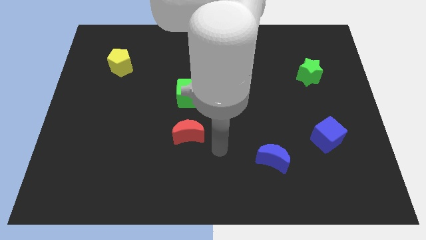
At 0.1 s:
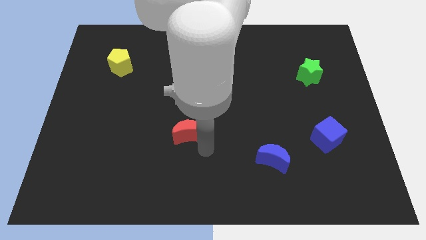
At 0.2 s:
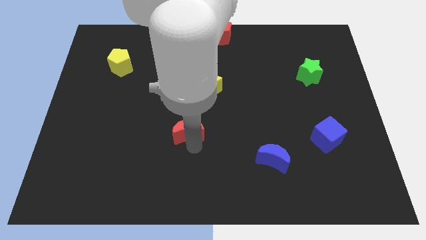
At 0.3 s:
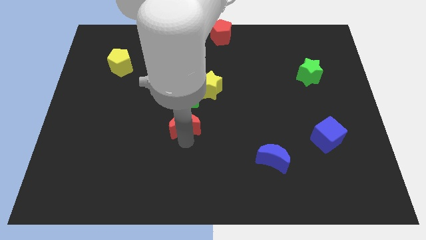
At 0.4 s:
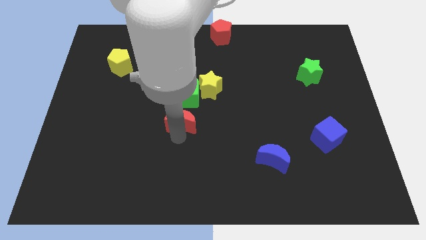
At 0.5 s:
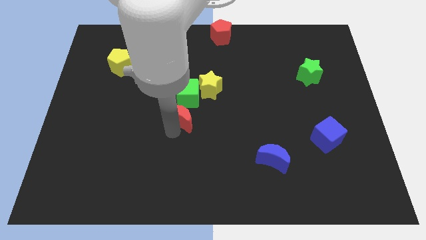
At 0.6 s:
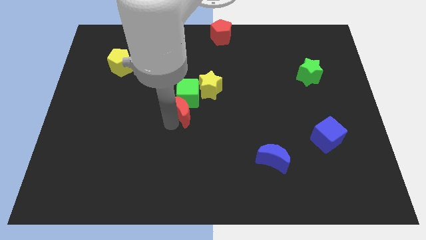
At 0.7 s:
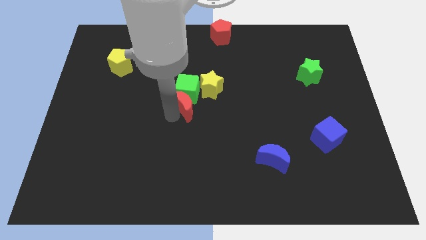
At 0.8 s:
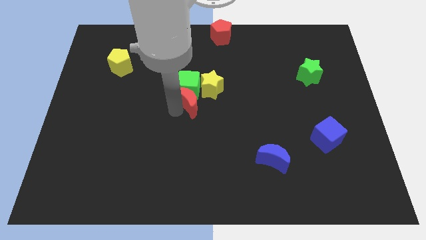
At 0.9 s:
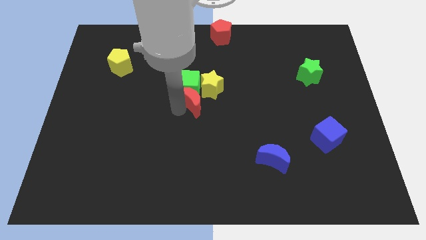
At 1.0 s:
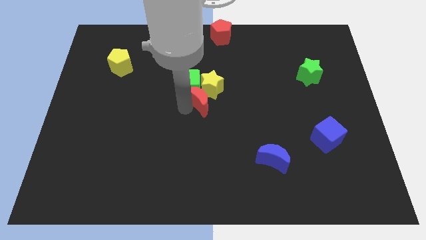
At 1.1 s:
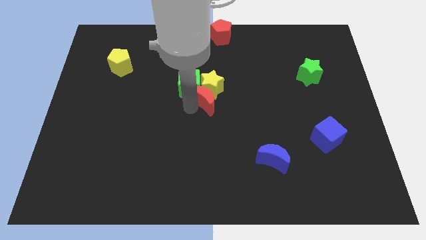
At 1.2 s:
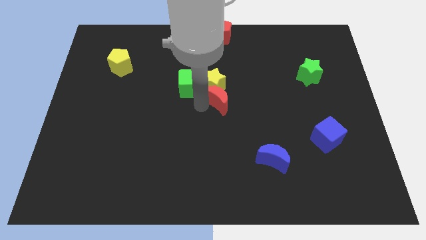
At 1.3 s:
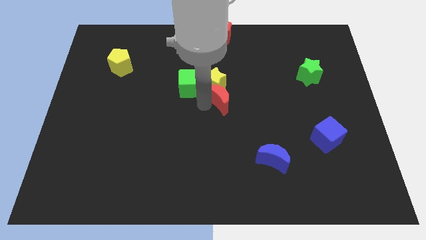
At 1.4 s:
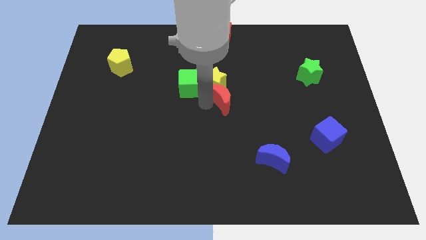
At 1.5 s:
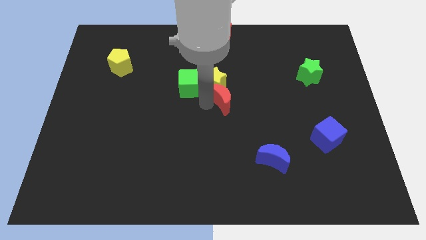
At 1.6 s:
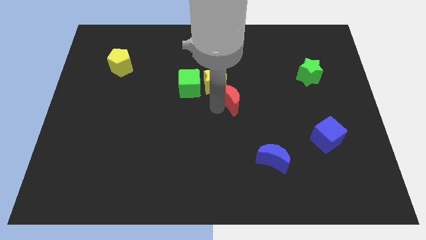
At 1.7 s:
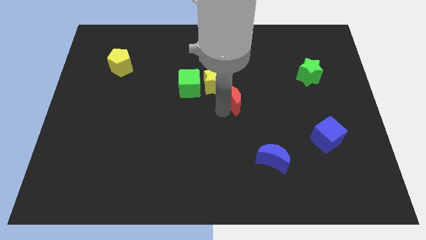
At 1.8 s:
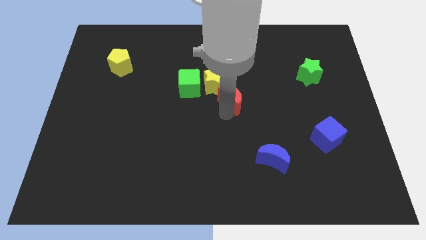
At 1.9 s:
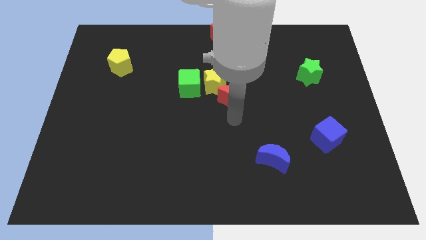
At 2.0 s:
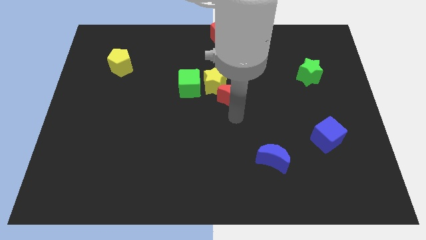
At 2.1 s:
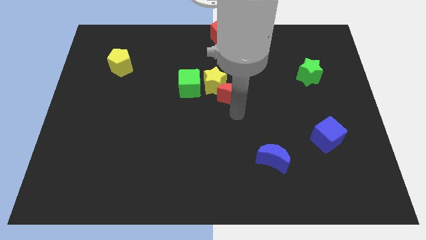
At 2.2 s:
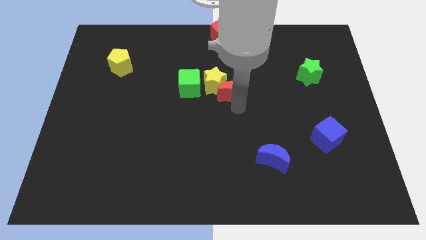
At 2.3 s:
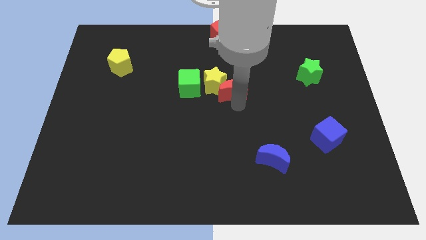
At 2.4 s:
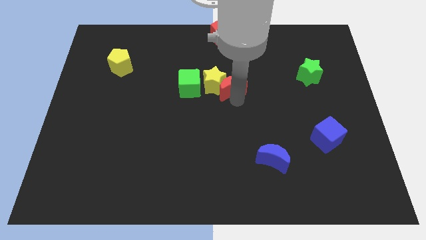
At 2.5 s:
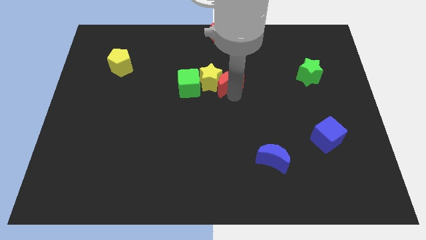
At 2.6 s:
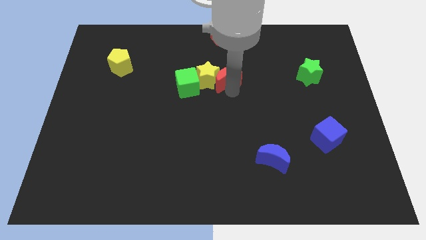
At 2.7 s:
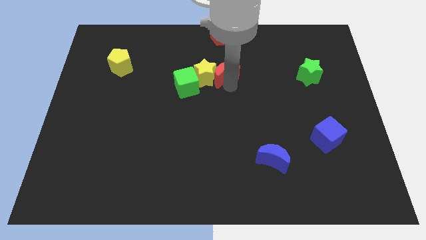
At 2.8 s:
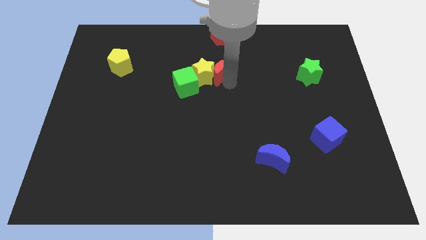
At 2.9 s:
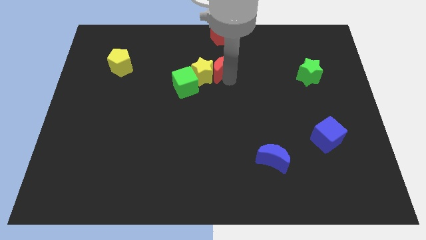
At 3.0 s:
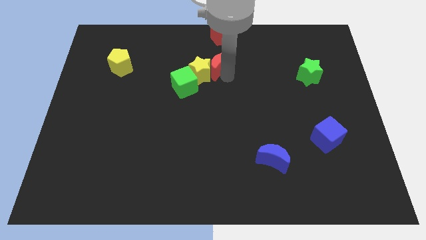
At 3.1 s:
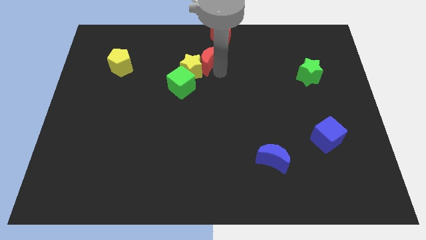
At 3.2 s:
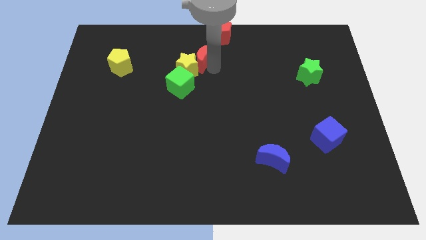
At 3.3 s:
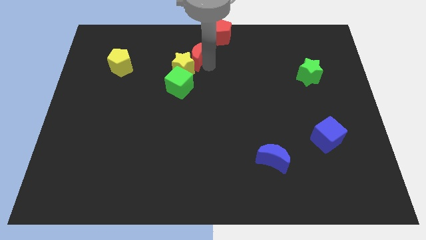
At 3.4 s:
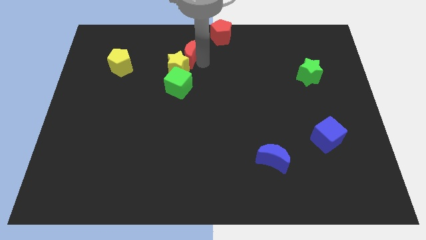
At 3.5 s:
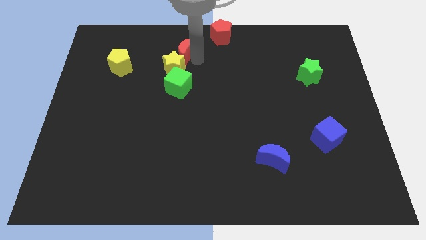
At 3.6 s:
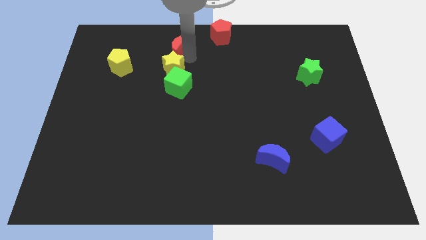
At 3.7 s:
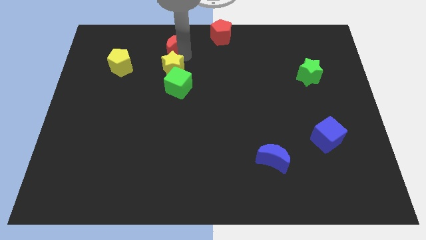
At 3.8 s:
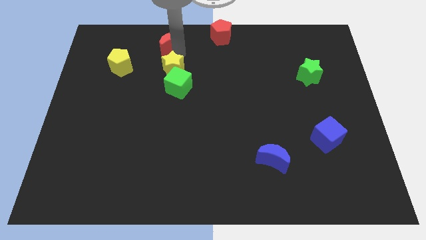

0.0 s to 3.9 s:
place the red crescent above the yellow star

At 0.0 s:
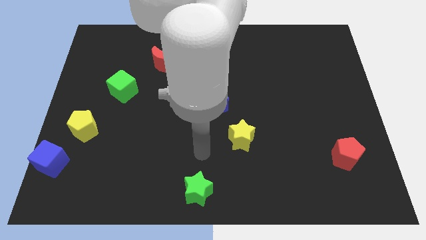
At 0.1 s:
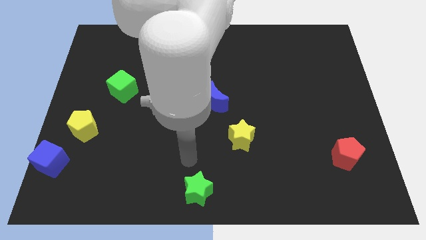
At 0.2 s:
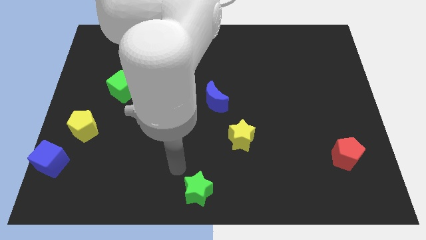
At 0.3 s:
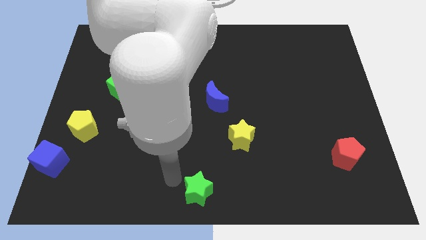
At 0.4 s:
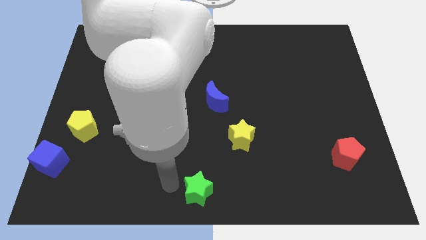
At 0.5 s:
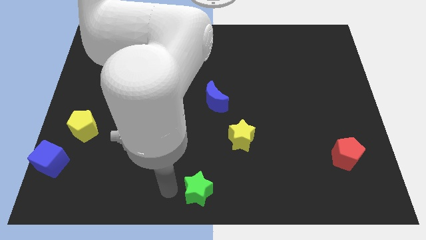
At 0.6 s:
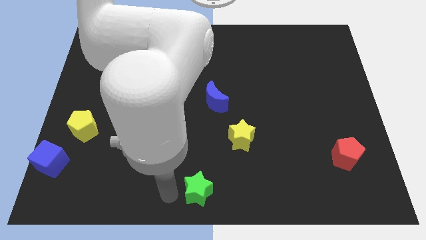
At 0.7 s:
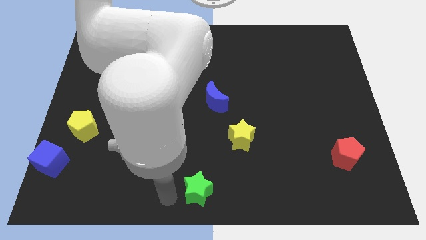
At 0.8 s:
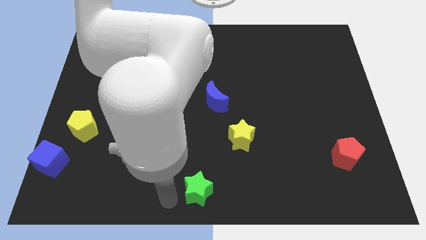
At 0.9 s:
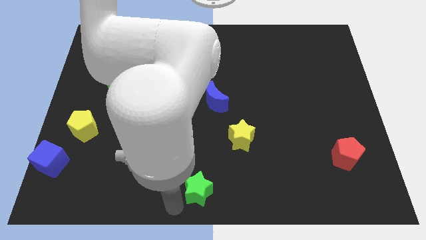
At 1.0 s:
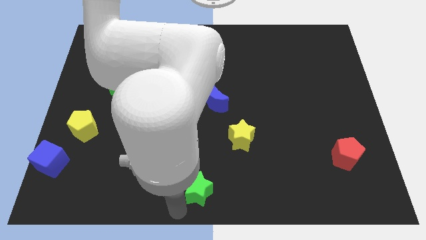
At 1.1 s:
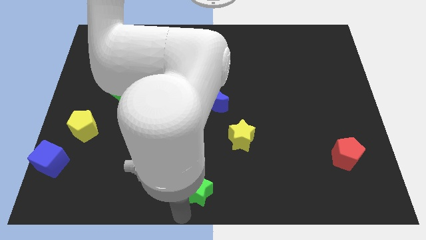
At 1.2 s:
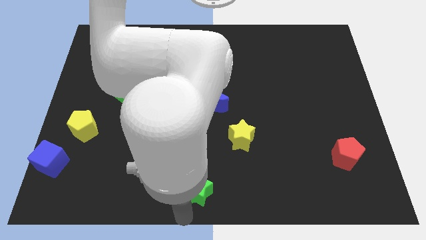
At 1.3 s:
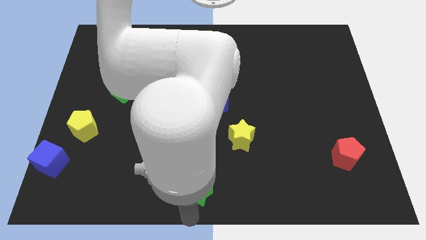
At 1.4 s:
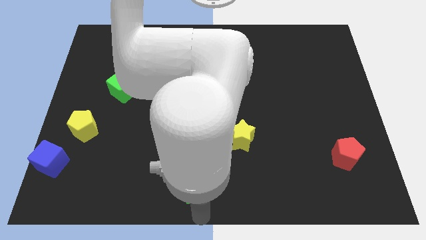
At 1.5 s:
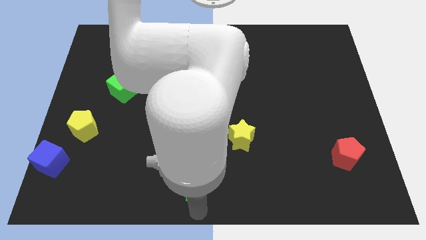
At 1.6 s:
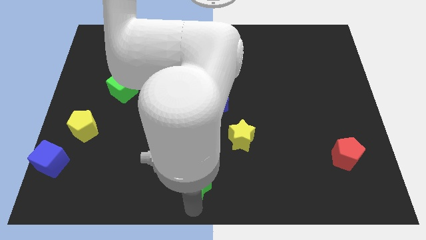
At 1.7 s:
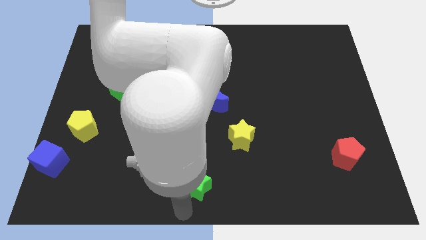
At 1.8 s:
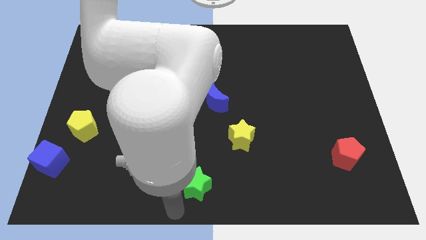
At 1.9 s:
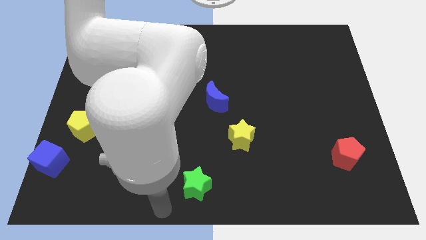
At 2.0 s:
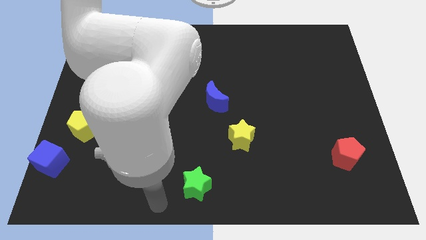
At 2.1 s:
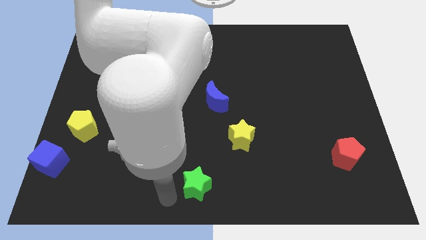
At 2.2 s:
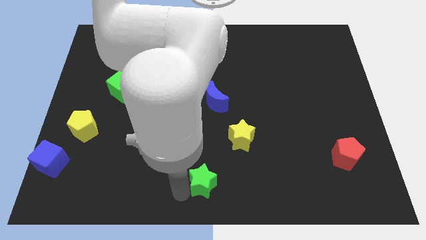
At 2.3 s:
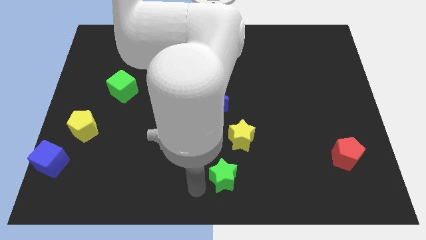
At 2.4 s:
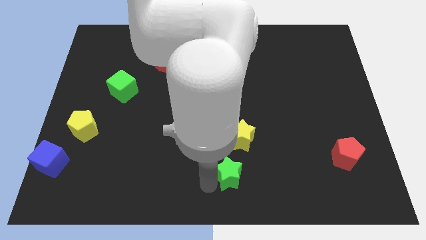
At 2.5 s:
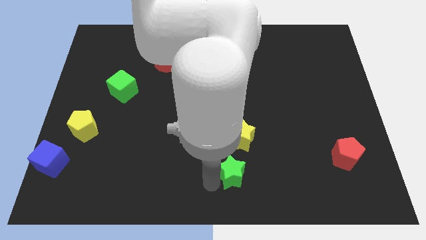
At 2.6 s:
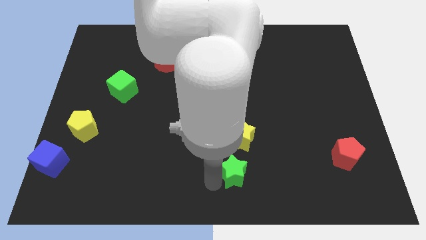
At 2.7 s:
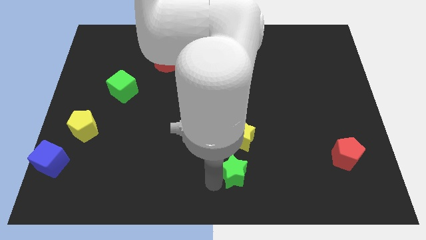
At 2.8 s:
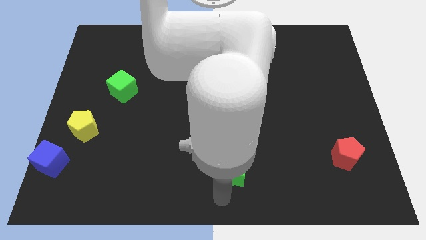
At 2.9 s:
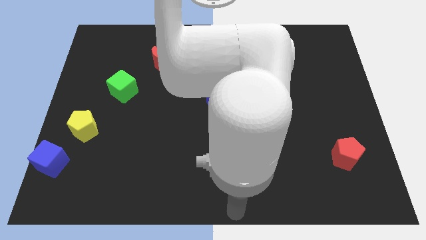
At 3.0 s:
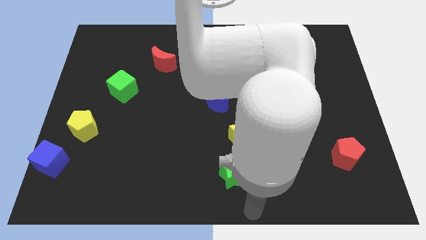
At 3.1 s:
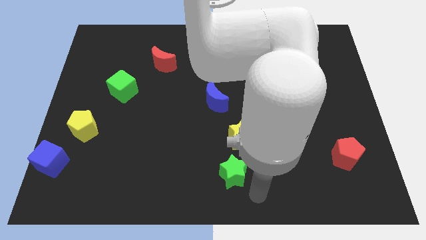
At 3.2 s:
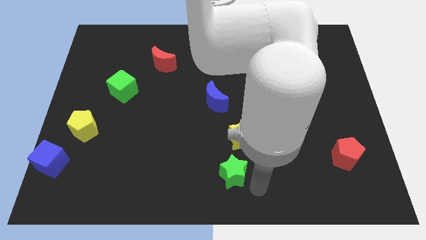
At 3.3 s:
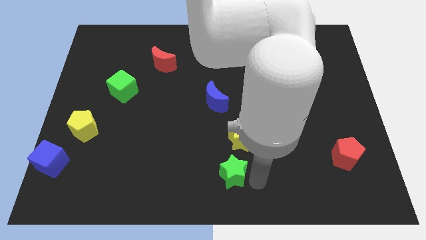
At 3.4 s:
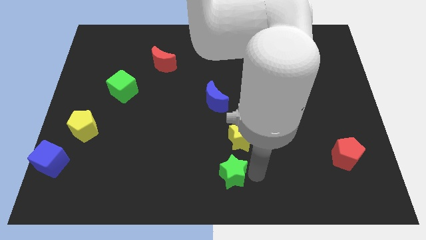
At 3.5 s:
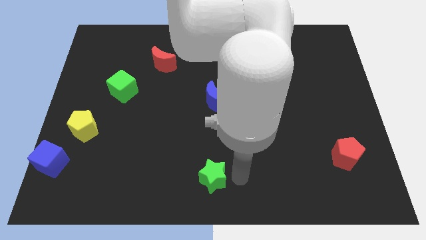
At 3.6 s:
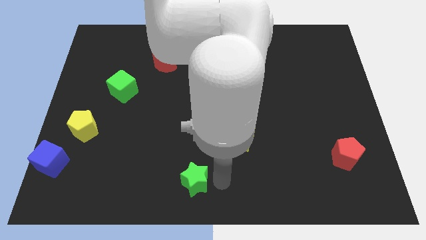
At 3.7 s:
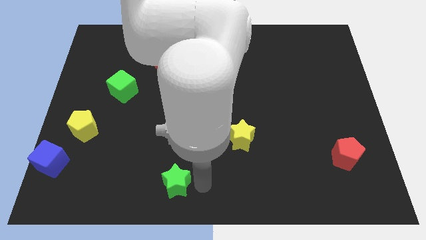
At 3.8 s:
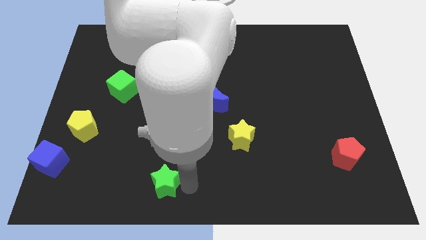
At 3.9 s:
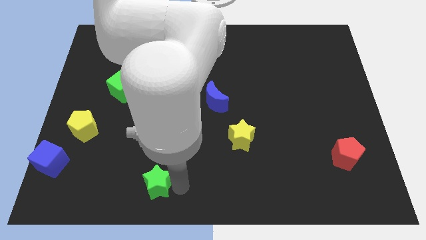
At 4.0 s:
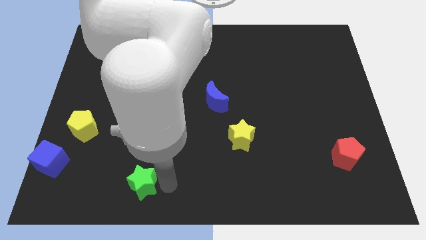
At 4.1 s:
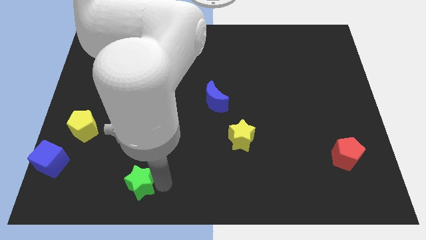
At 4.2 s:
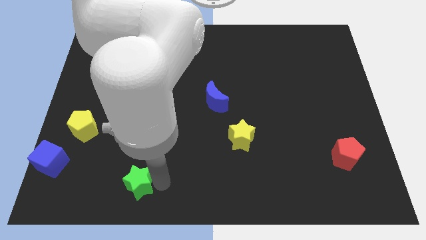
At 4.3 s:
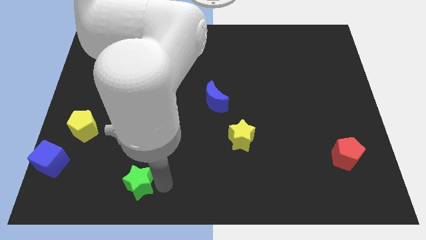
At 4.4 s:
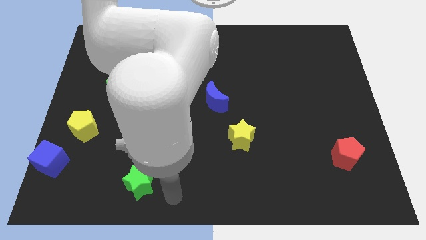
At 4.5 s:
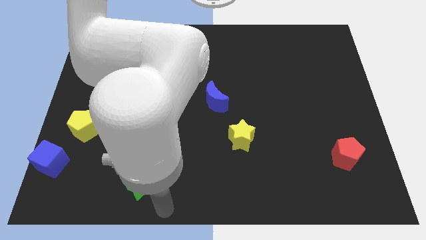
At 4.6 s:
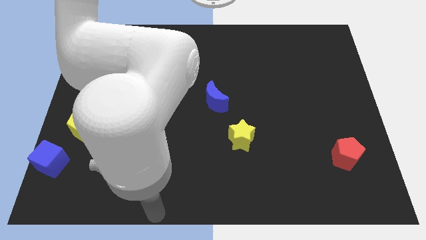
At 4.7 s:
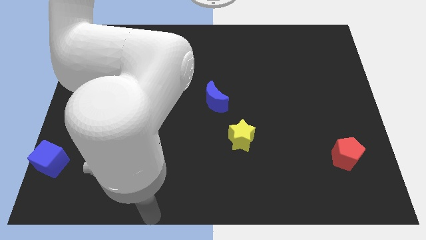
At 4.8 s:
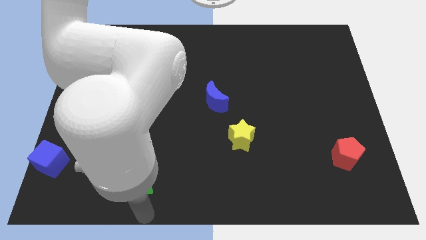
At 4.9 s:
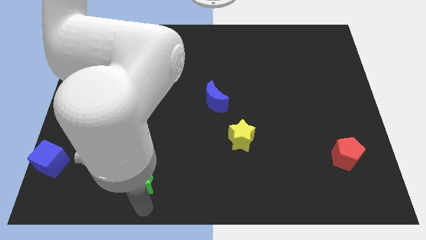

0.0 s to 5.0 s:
push the green star to the left of the board
